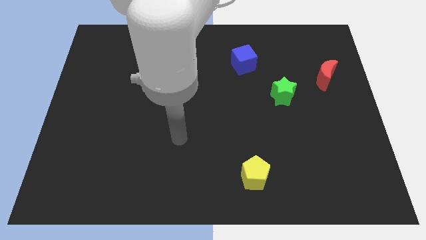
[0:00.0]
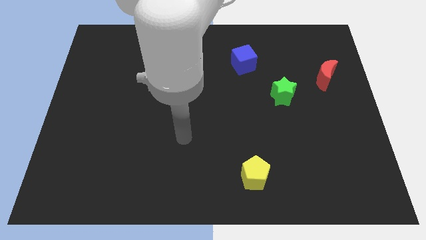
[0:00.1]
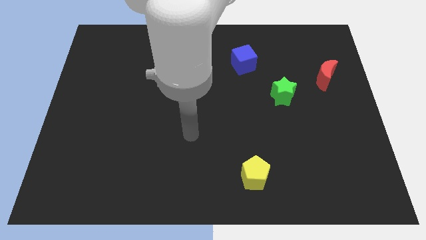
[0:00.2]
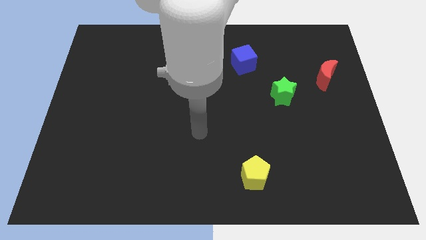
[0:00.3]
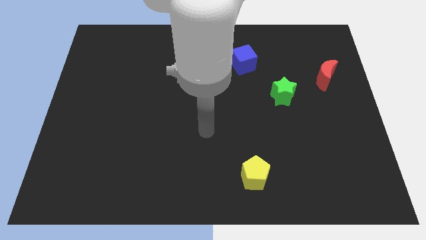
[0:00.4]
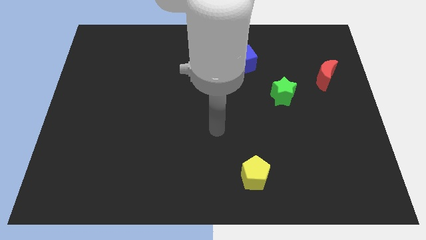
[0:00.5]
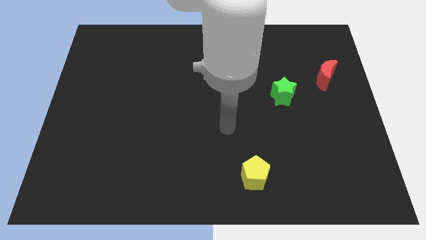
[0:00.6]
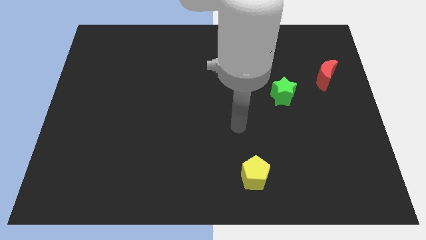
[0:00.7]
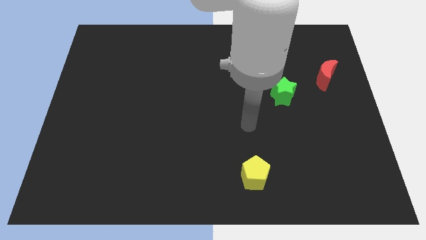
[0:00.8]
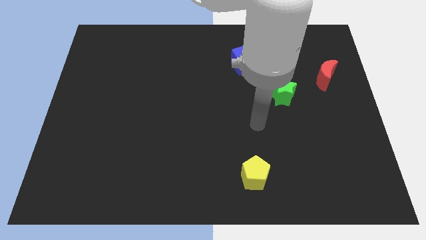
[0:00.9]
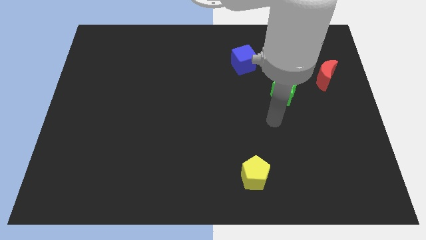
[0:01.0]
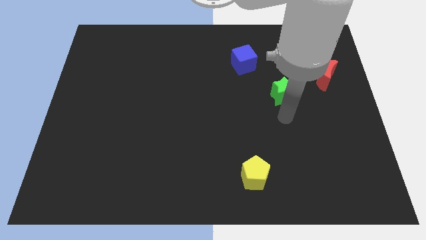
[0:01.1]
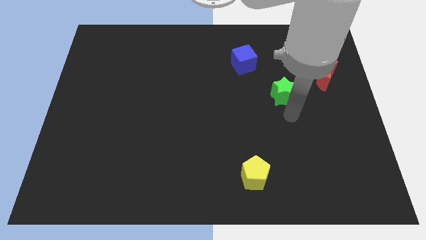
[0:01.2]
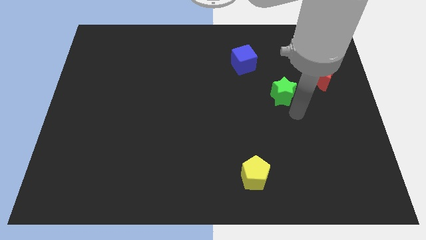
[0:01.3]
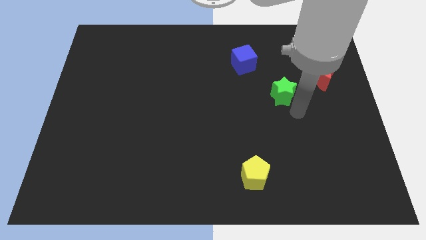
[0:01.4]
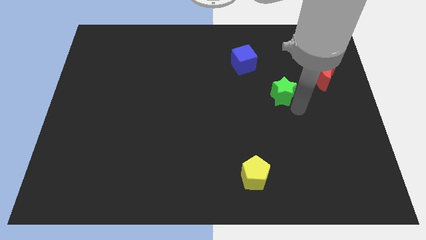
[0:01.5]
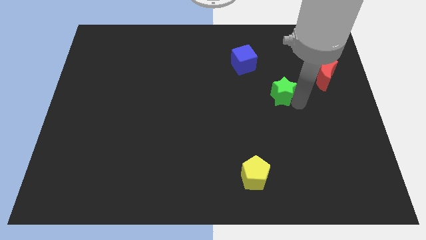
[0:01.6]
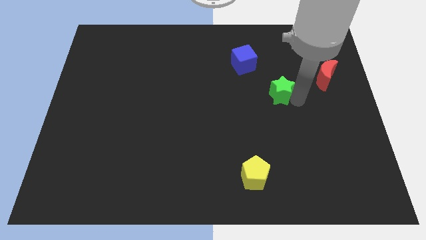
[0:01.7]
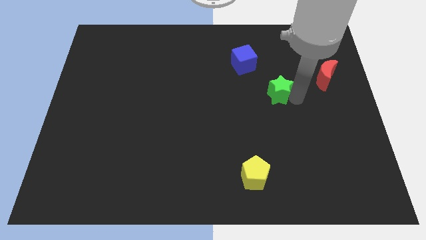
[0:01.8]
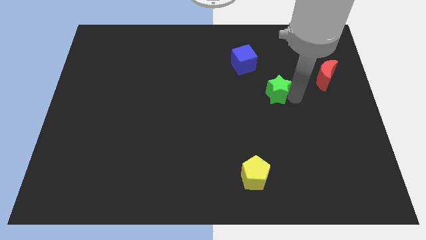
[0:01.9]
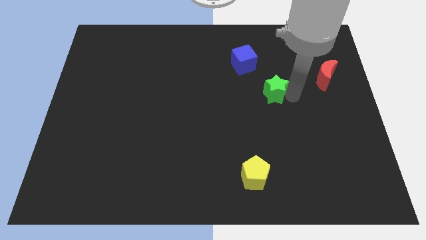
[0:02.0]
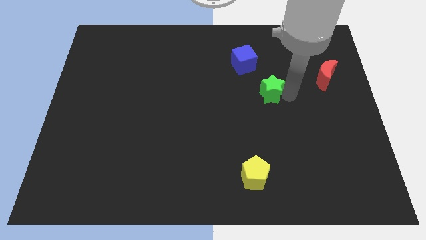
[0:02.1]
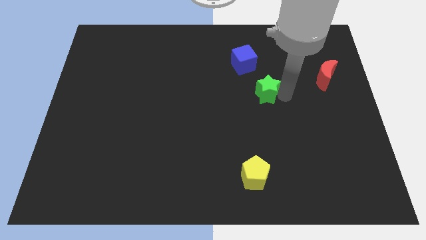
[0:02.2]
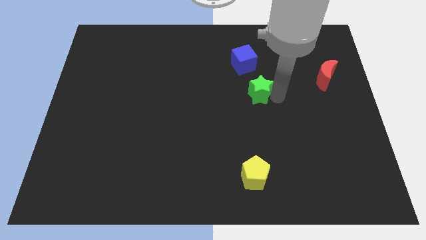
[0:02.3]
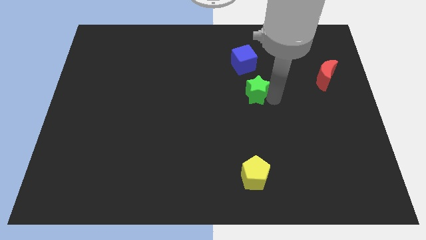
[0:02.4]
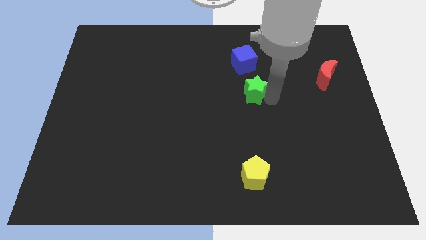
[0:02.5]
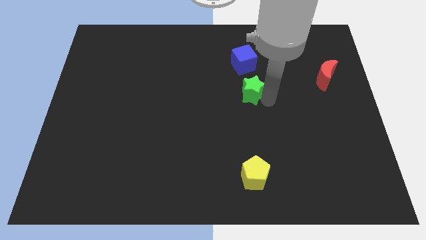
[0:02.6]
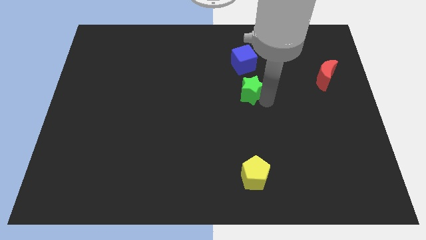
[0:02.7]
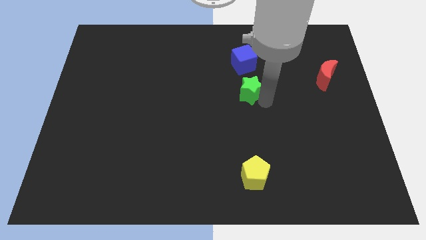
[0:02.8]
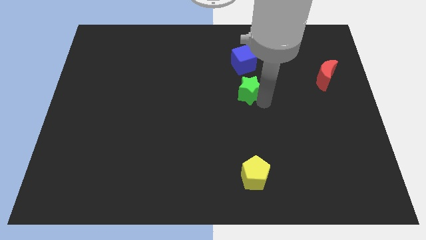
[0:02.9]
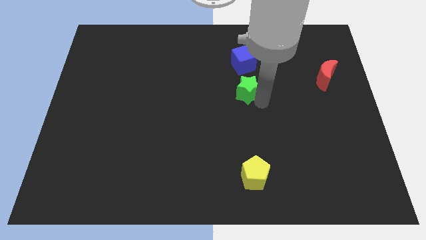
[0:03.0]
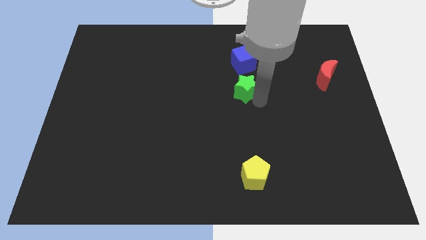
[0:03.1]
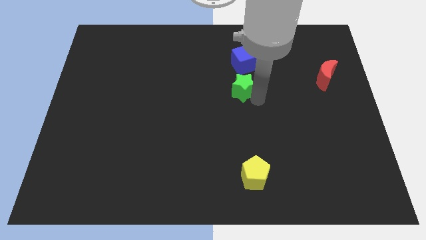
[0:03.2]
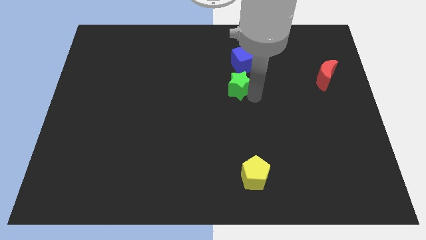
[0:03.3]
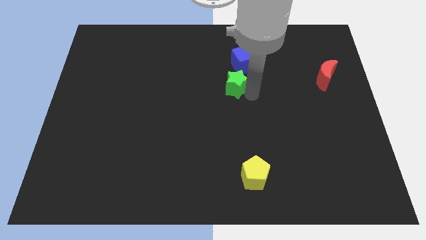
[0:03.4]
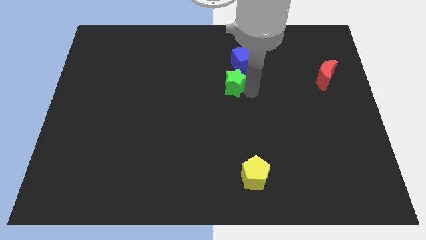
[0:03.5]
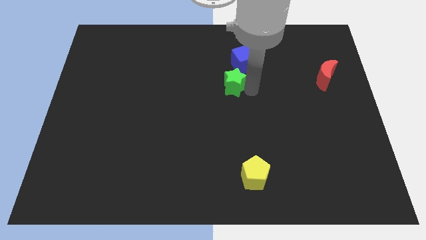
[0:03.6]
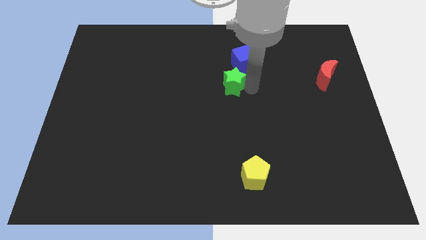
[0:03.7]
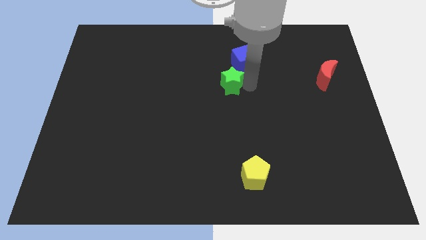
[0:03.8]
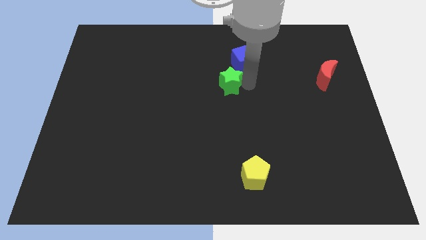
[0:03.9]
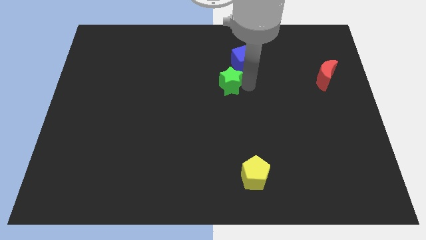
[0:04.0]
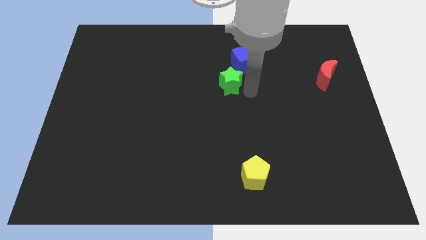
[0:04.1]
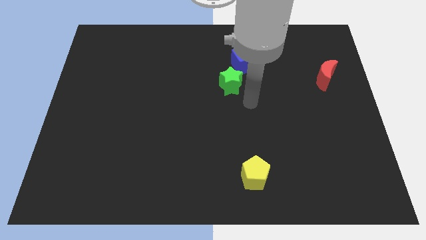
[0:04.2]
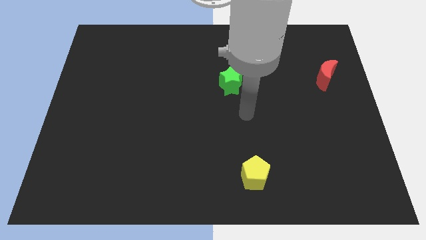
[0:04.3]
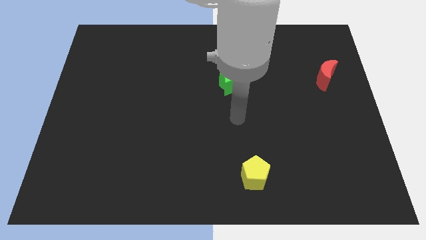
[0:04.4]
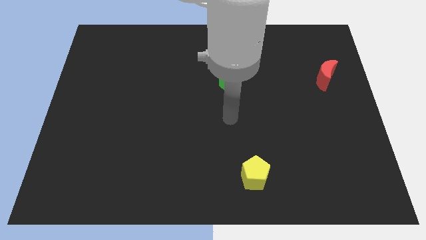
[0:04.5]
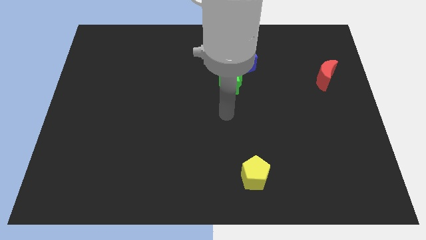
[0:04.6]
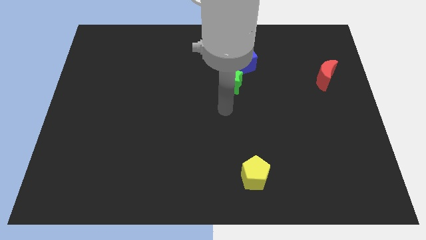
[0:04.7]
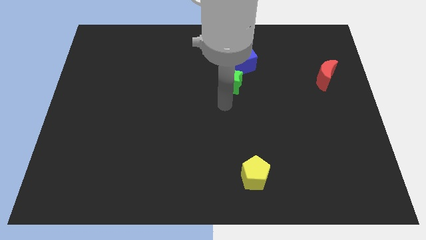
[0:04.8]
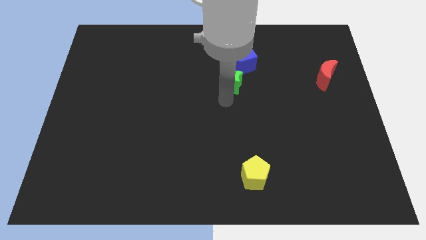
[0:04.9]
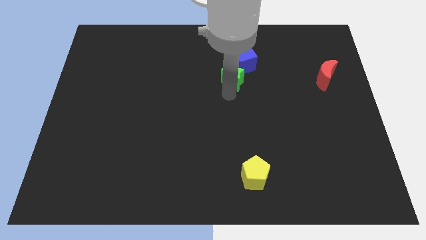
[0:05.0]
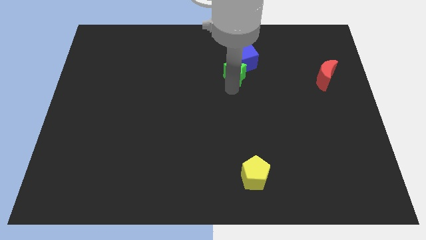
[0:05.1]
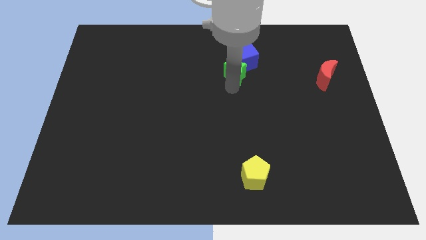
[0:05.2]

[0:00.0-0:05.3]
push the star to the blue block

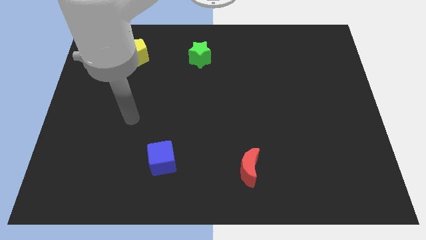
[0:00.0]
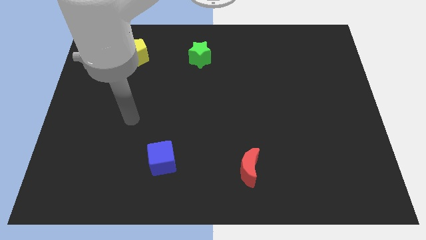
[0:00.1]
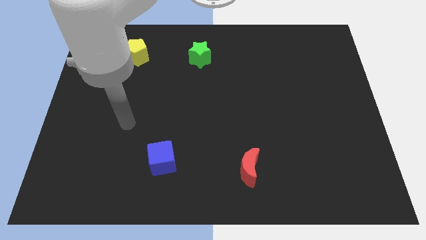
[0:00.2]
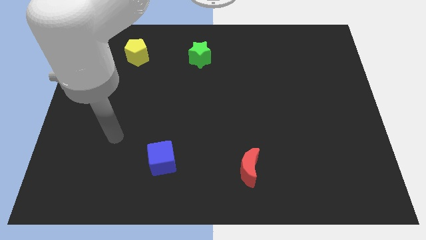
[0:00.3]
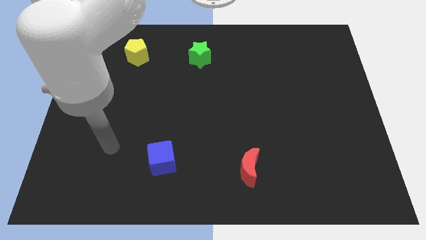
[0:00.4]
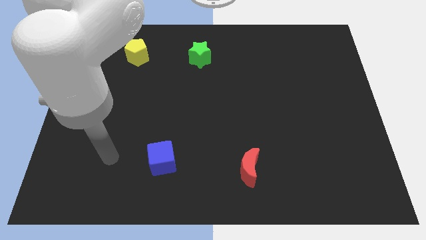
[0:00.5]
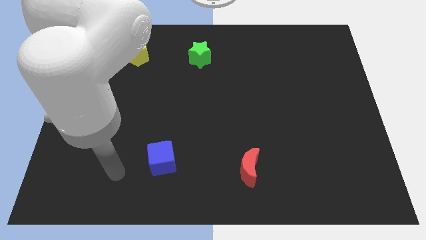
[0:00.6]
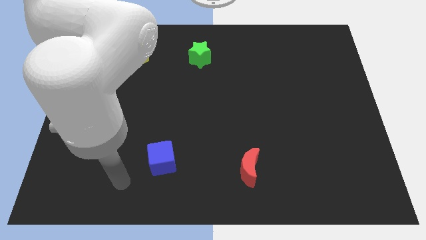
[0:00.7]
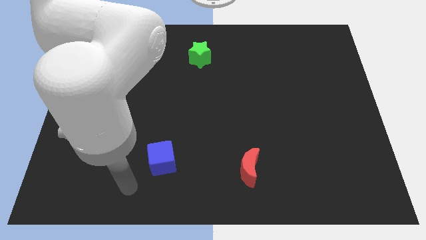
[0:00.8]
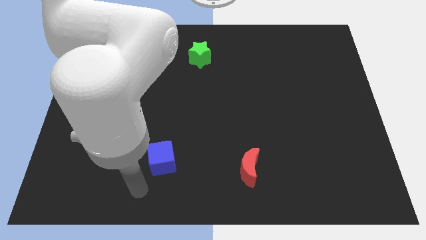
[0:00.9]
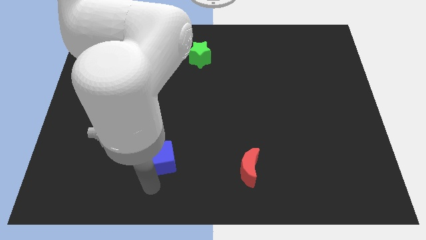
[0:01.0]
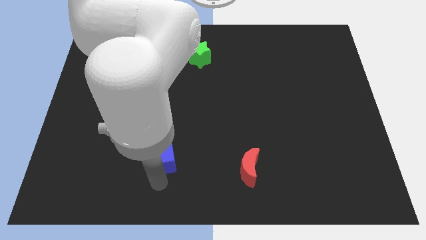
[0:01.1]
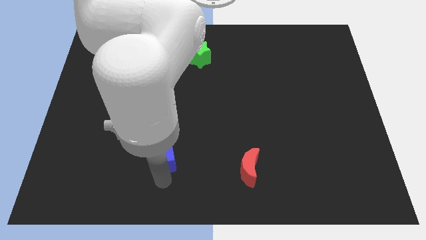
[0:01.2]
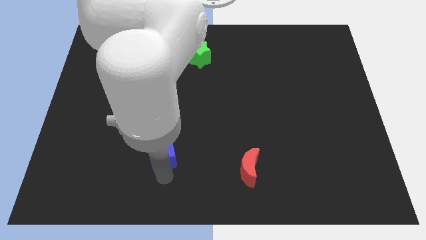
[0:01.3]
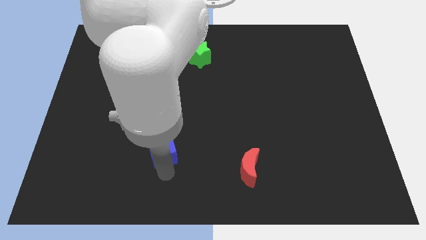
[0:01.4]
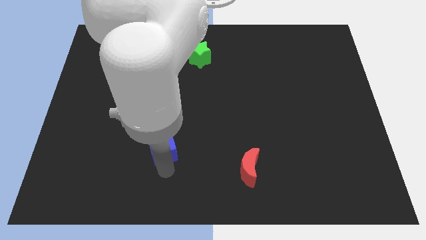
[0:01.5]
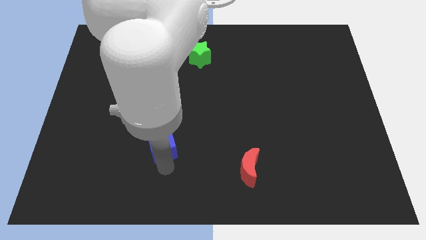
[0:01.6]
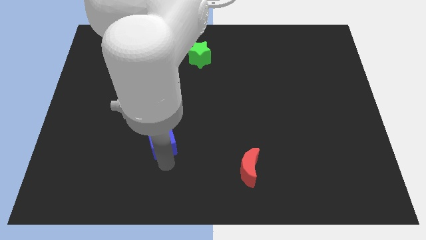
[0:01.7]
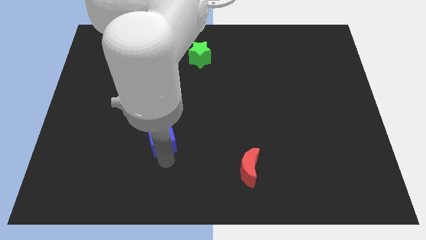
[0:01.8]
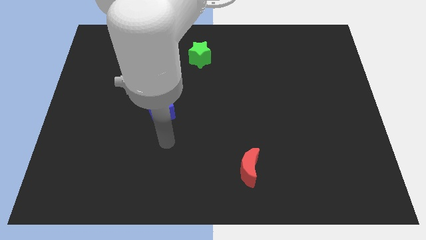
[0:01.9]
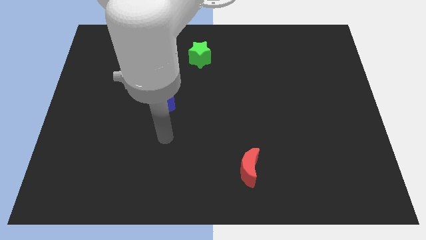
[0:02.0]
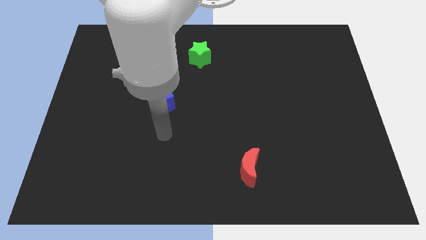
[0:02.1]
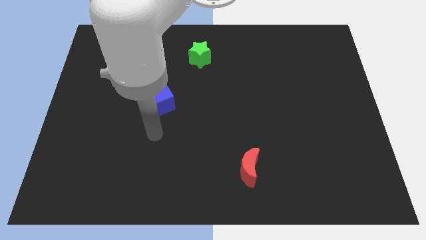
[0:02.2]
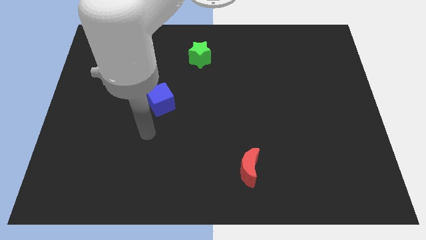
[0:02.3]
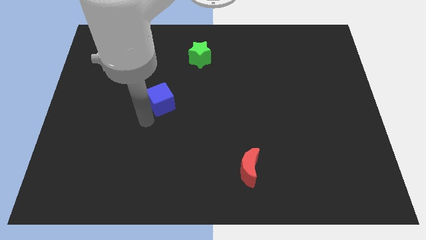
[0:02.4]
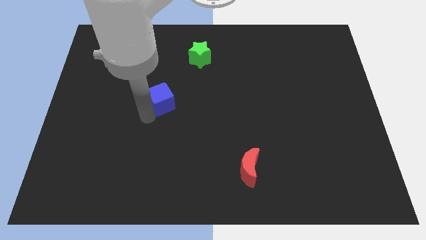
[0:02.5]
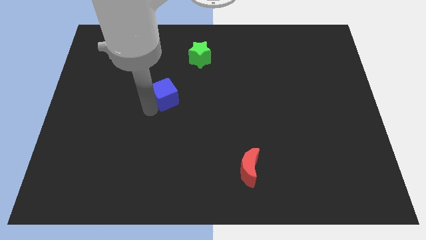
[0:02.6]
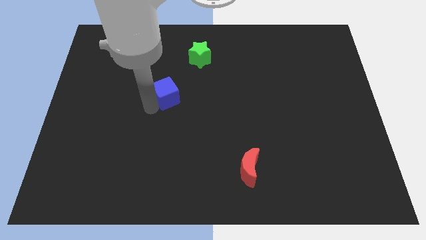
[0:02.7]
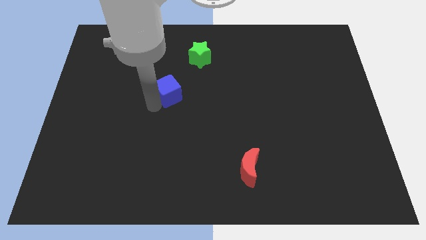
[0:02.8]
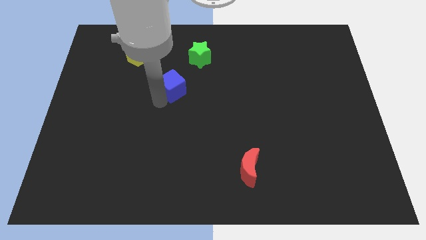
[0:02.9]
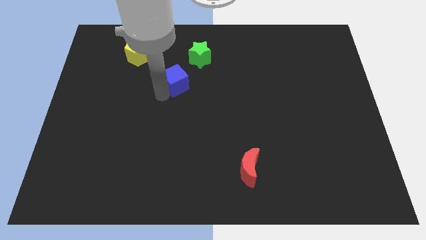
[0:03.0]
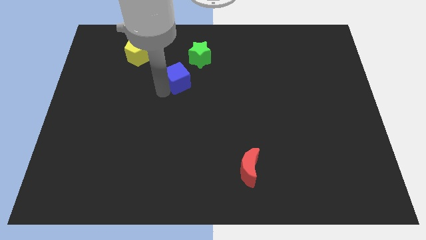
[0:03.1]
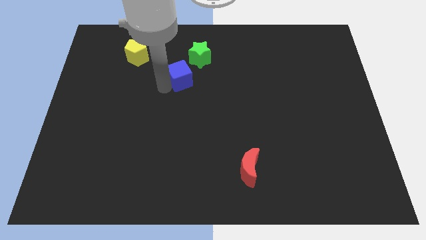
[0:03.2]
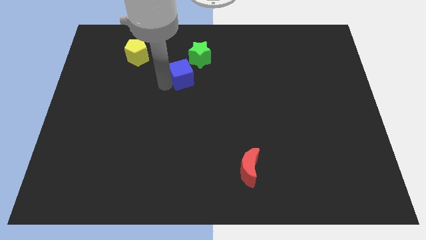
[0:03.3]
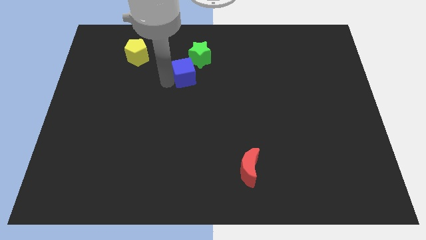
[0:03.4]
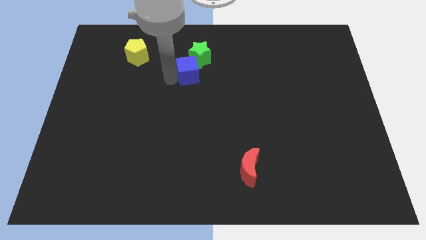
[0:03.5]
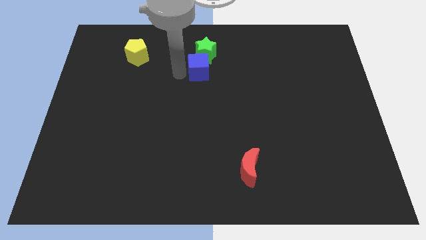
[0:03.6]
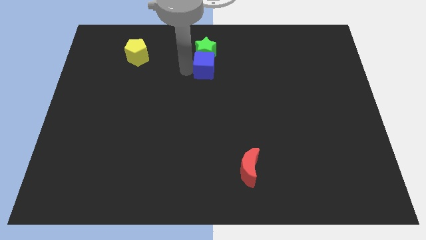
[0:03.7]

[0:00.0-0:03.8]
push the cube to the star
